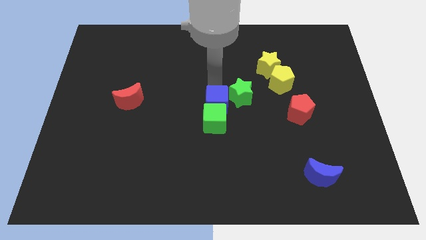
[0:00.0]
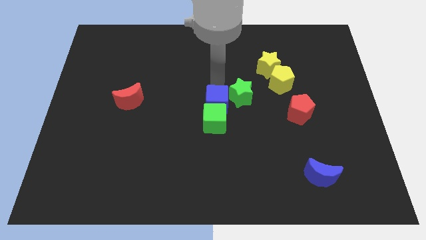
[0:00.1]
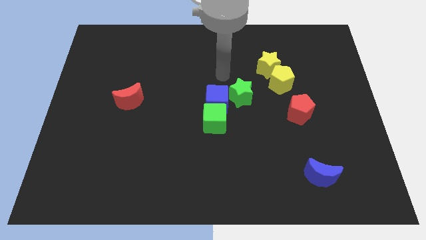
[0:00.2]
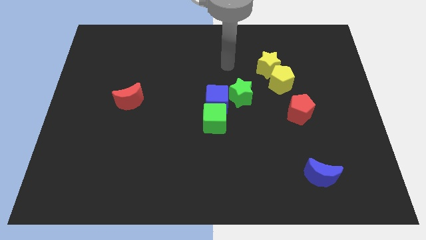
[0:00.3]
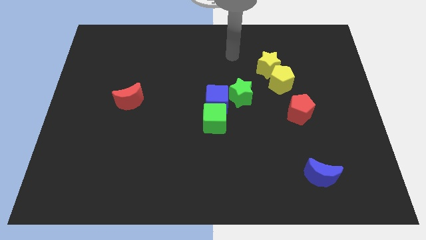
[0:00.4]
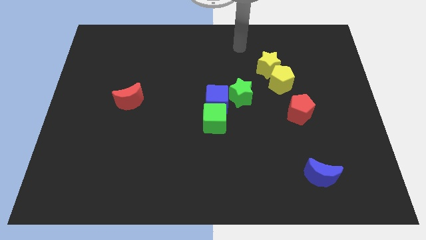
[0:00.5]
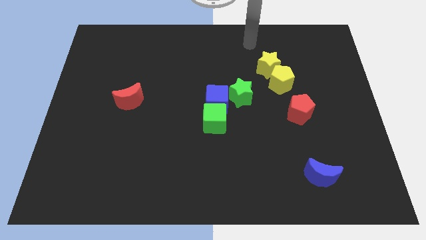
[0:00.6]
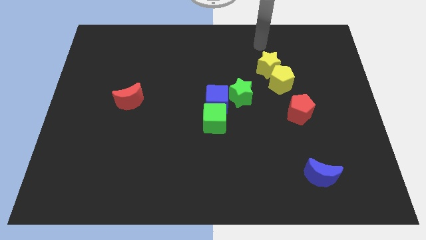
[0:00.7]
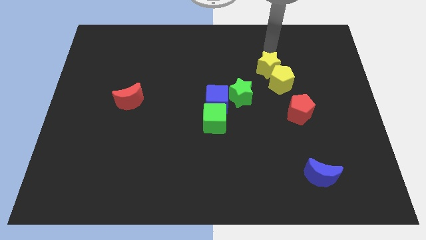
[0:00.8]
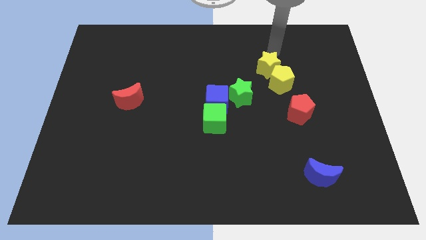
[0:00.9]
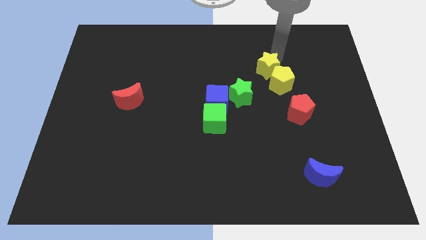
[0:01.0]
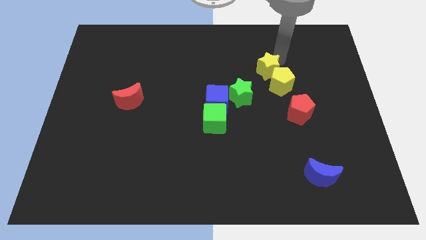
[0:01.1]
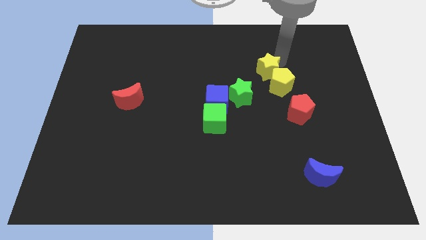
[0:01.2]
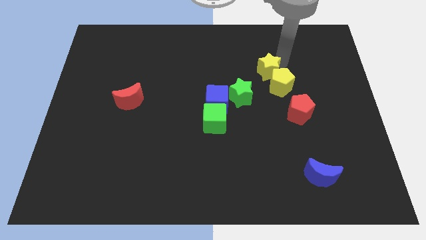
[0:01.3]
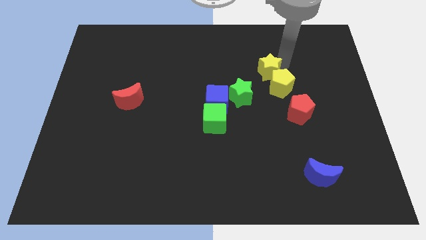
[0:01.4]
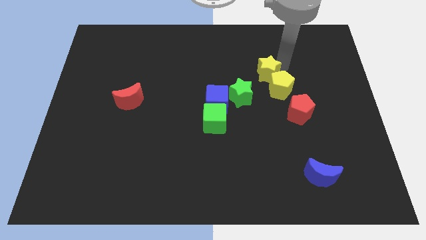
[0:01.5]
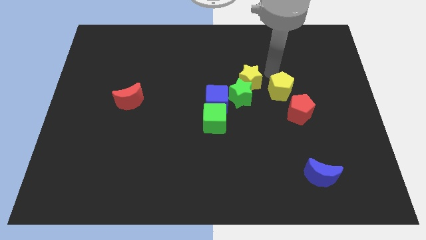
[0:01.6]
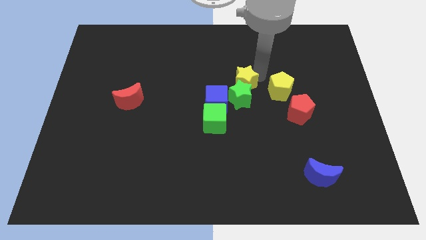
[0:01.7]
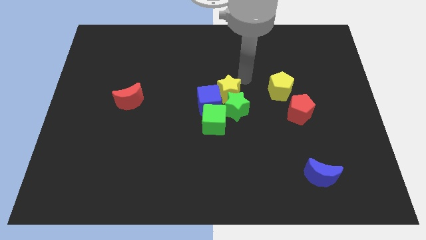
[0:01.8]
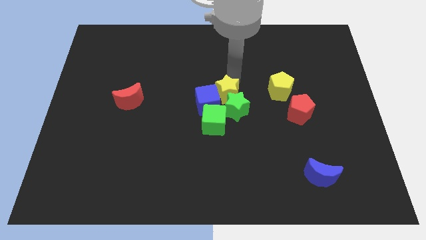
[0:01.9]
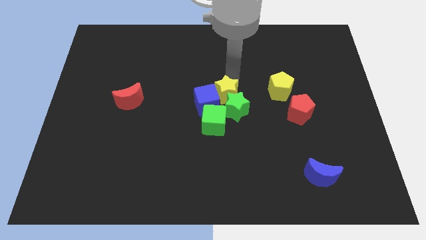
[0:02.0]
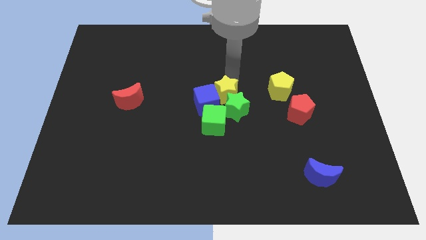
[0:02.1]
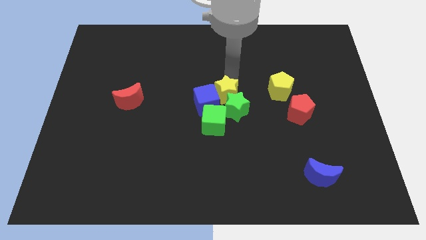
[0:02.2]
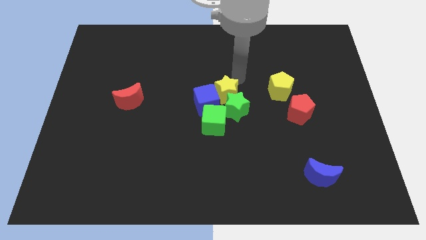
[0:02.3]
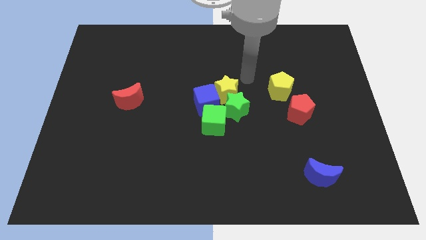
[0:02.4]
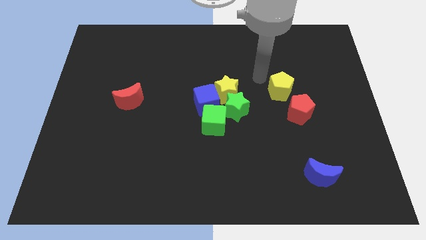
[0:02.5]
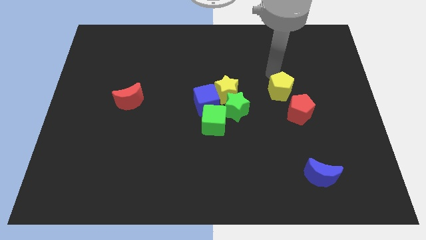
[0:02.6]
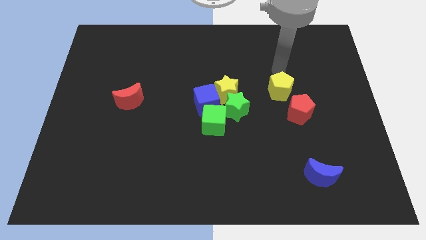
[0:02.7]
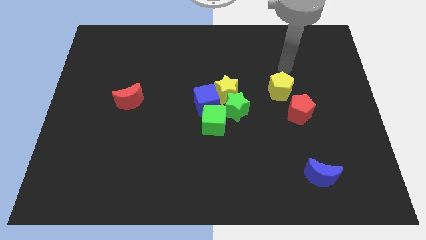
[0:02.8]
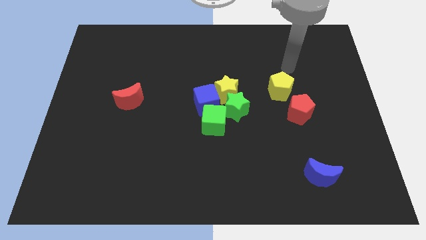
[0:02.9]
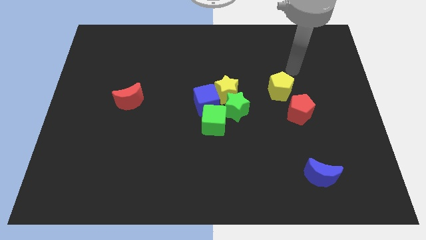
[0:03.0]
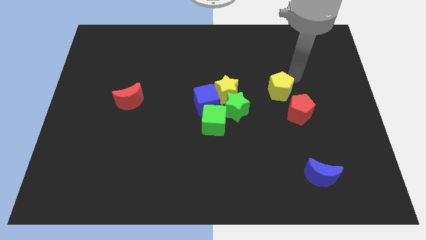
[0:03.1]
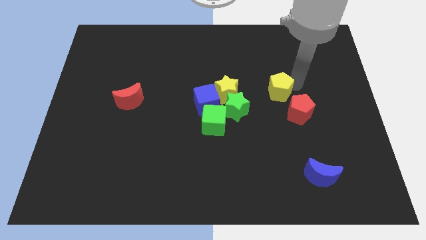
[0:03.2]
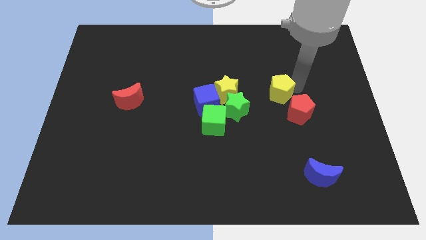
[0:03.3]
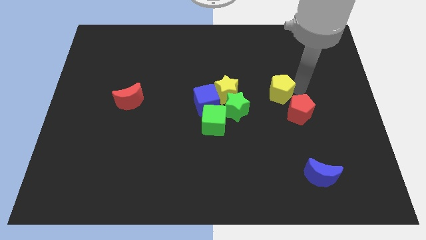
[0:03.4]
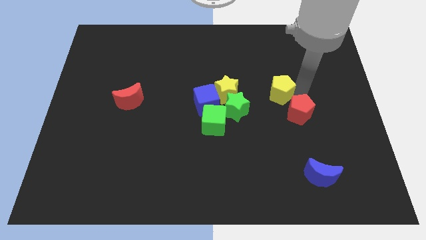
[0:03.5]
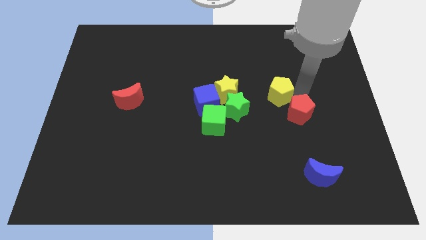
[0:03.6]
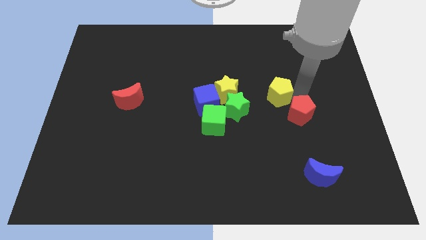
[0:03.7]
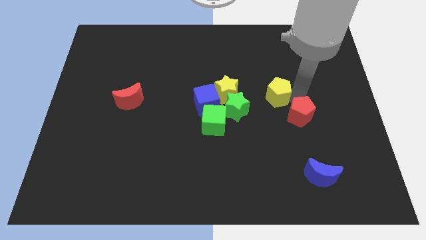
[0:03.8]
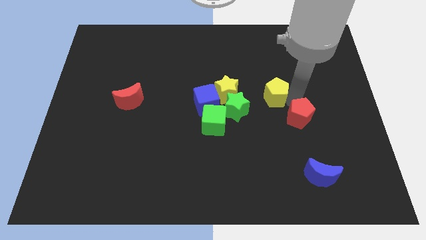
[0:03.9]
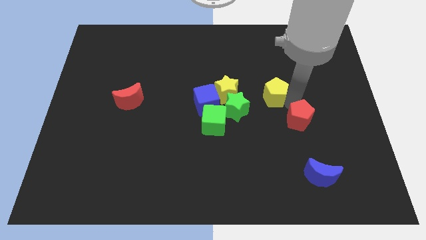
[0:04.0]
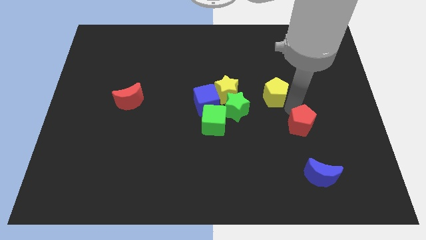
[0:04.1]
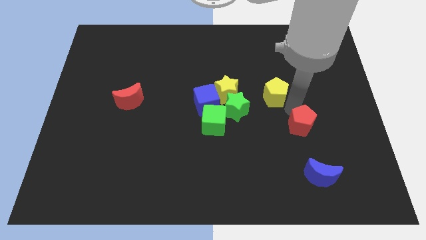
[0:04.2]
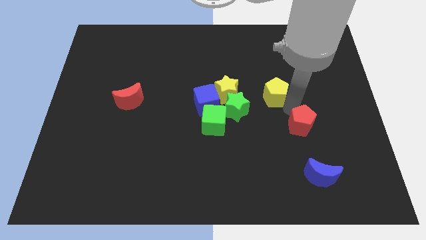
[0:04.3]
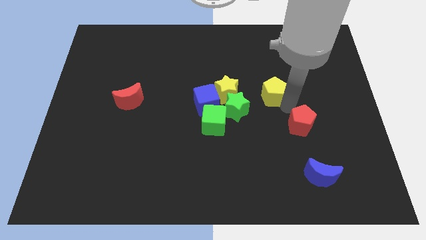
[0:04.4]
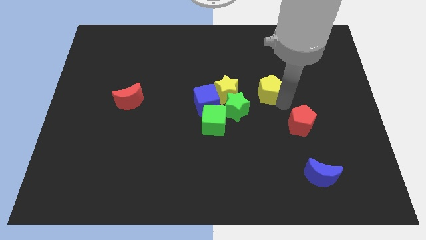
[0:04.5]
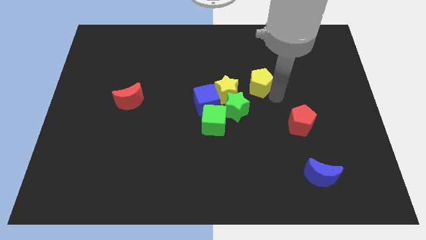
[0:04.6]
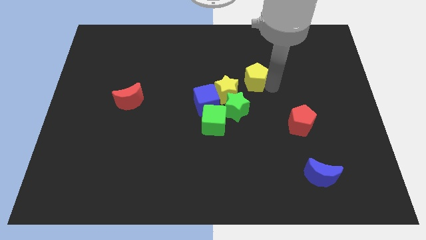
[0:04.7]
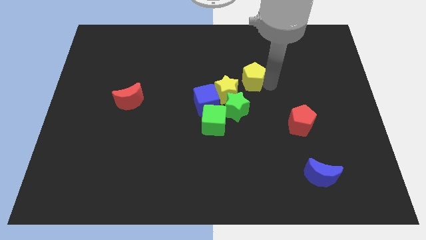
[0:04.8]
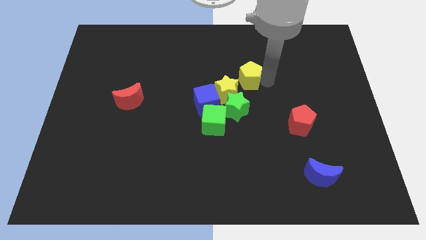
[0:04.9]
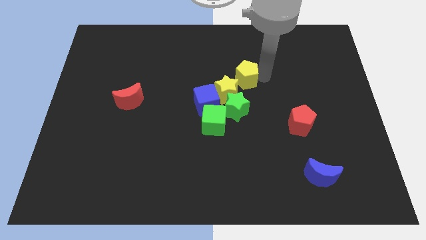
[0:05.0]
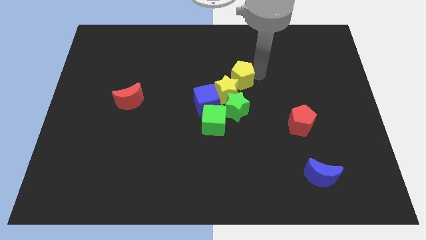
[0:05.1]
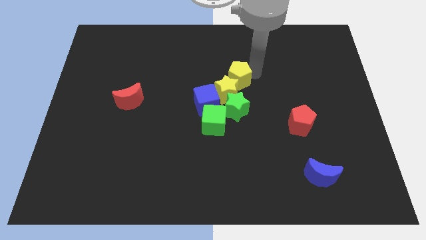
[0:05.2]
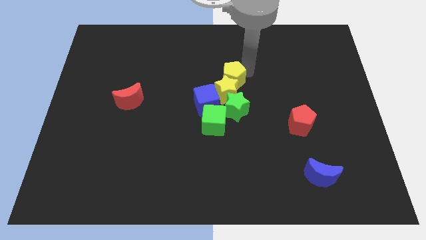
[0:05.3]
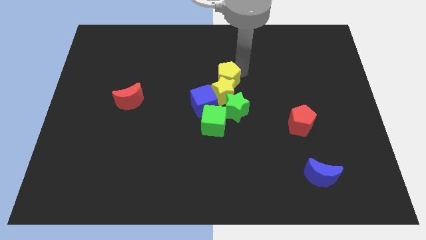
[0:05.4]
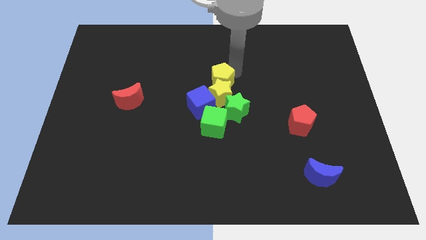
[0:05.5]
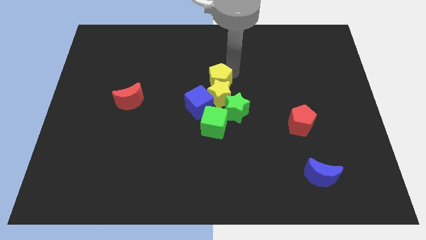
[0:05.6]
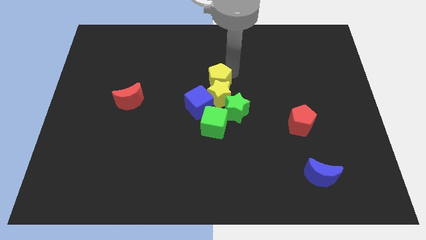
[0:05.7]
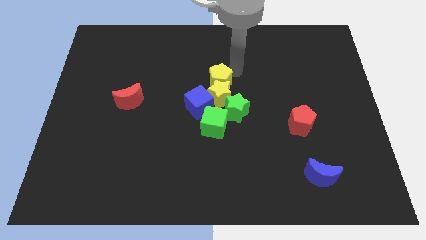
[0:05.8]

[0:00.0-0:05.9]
move yellow blocks to the center of the board

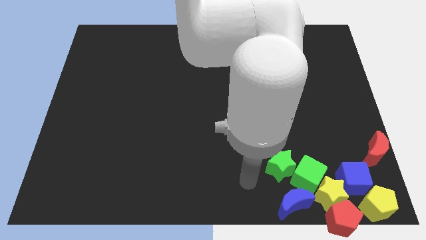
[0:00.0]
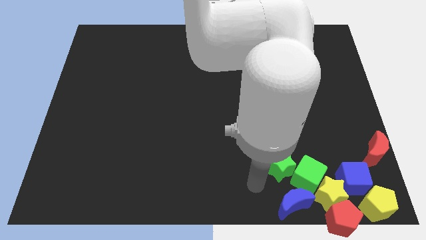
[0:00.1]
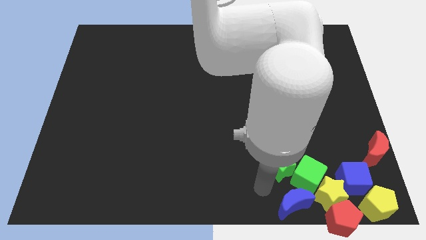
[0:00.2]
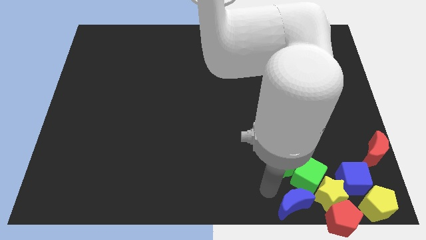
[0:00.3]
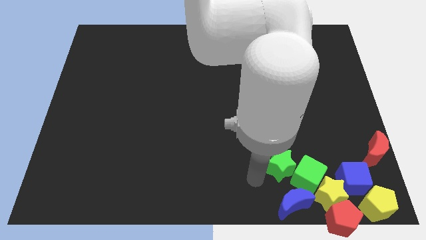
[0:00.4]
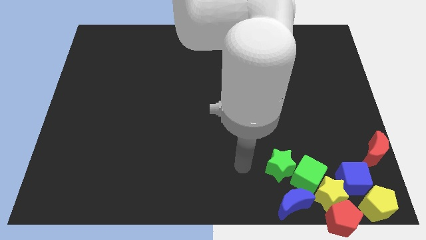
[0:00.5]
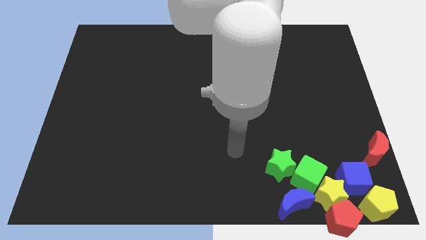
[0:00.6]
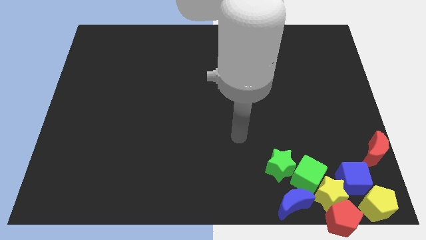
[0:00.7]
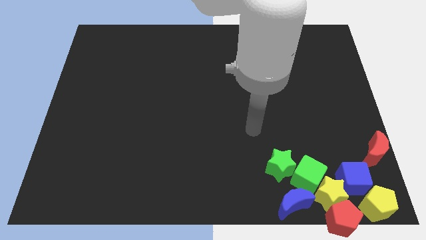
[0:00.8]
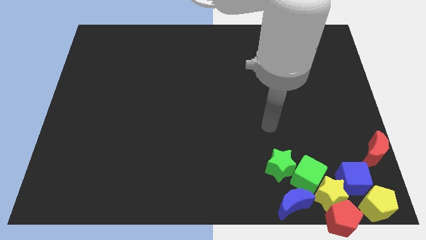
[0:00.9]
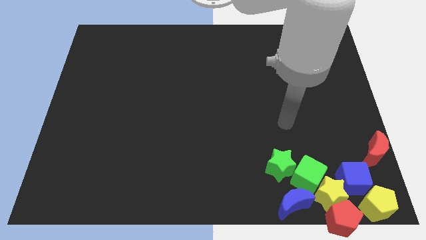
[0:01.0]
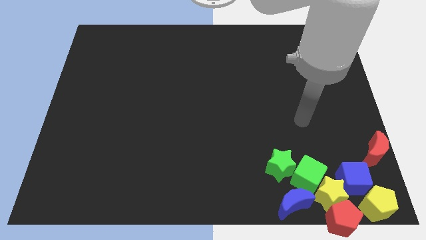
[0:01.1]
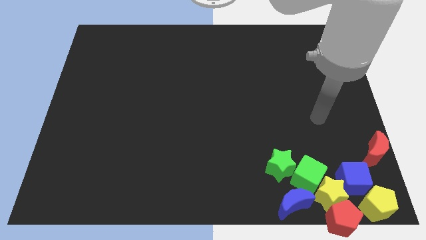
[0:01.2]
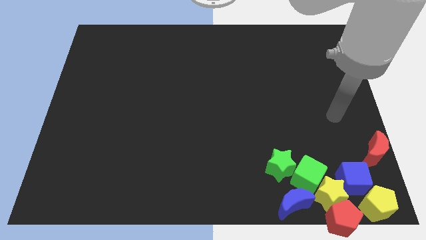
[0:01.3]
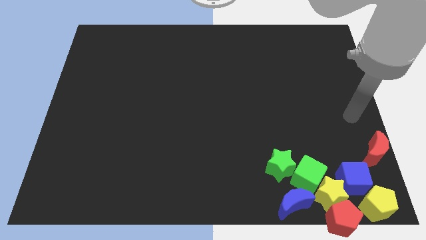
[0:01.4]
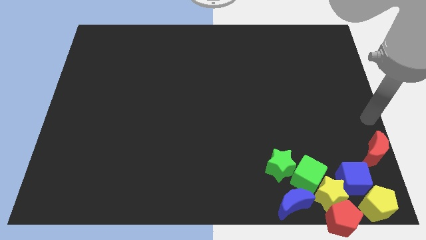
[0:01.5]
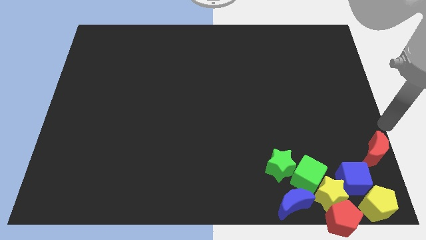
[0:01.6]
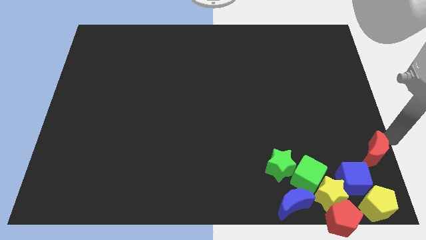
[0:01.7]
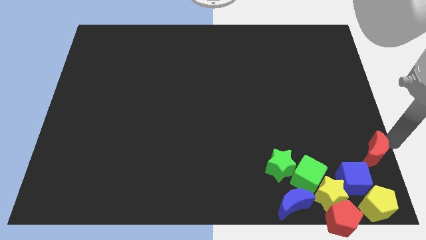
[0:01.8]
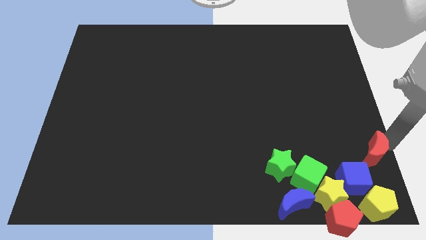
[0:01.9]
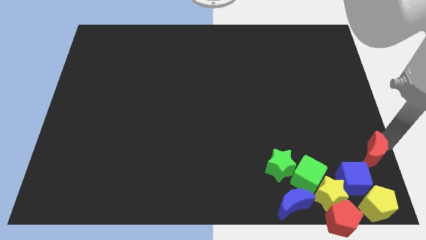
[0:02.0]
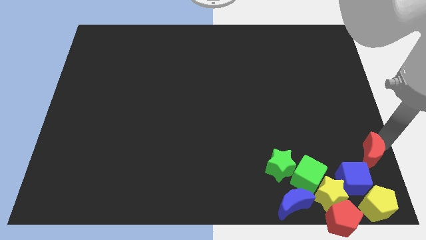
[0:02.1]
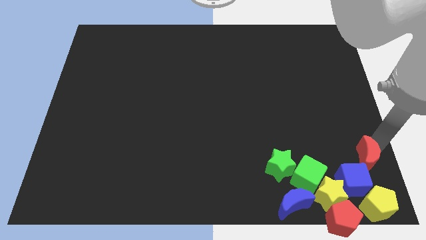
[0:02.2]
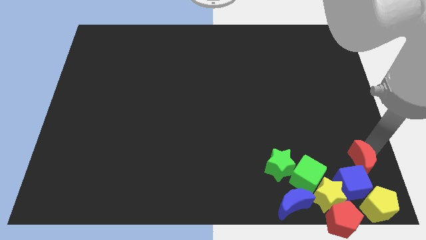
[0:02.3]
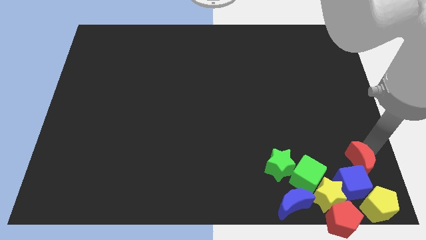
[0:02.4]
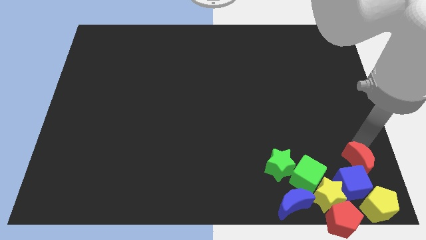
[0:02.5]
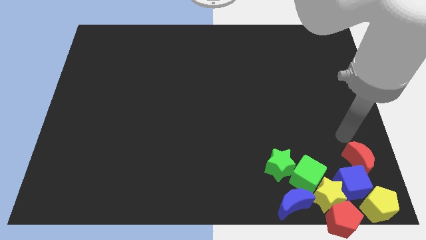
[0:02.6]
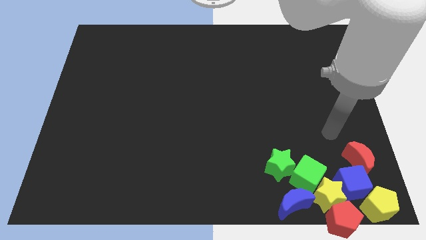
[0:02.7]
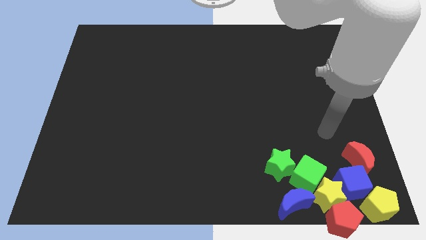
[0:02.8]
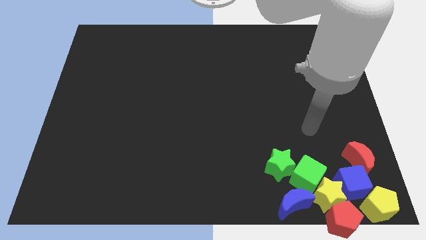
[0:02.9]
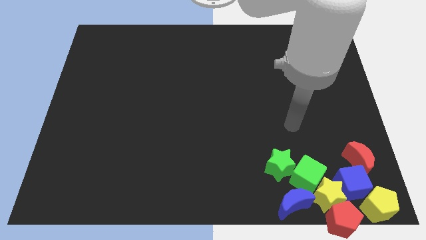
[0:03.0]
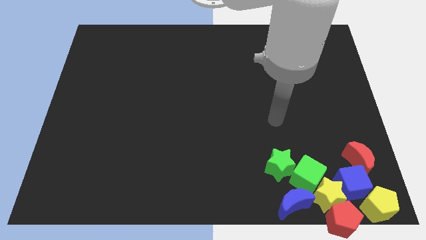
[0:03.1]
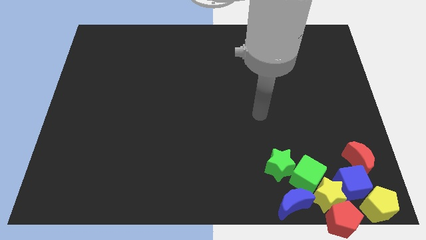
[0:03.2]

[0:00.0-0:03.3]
push the red crescent into the blue cube
